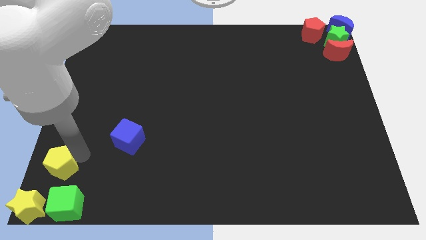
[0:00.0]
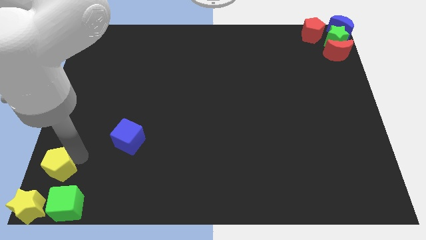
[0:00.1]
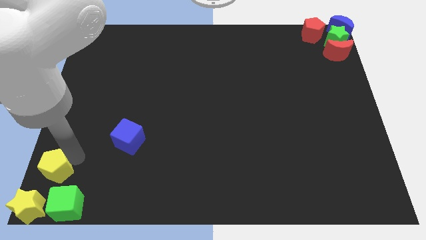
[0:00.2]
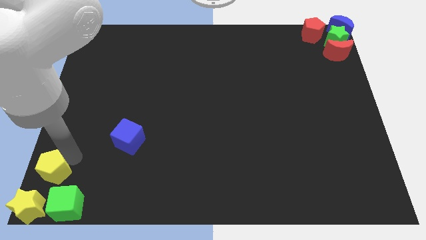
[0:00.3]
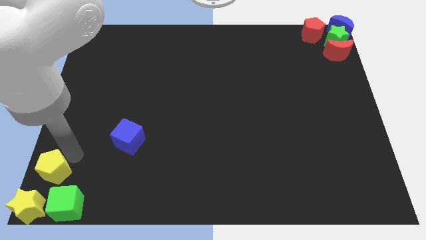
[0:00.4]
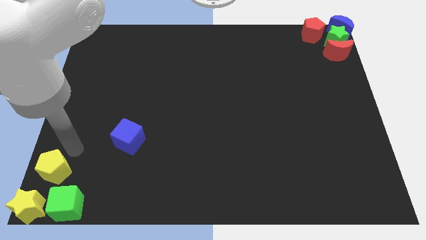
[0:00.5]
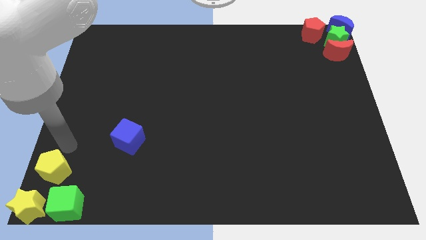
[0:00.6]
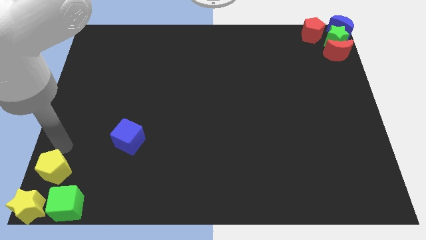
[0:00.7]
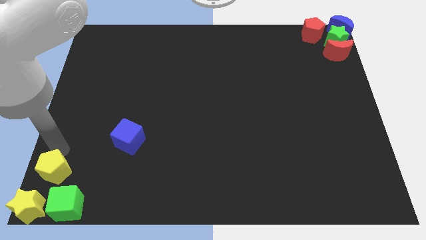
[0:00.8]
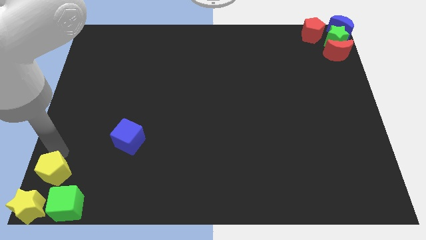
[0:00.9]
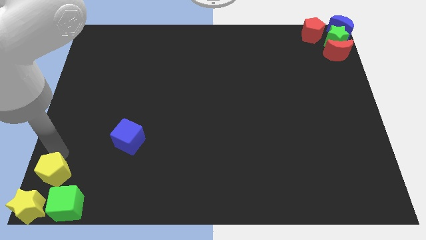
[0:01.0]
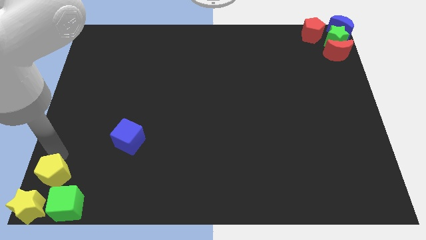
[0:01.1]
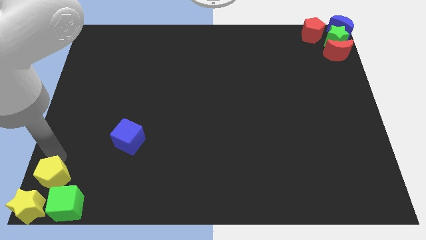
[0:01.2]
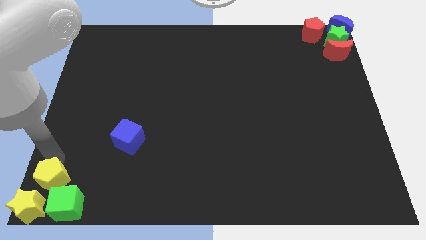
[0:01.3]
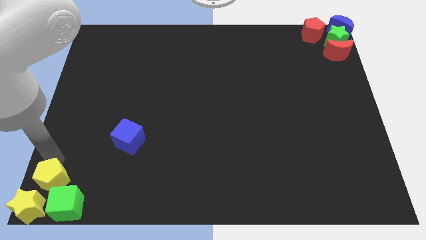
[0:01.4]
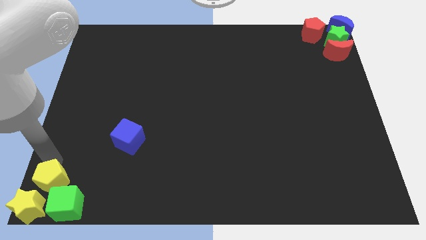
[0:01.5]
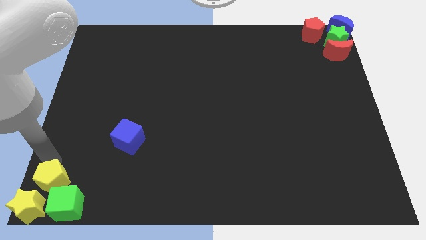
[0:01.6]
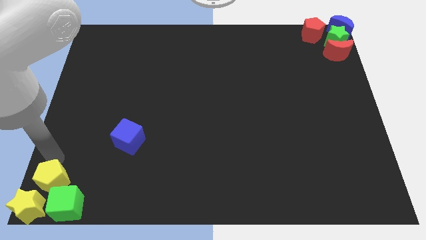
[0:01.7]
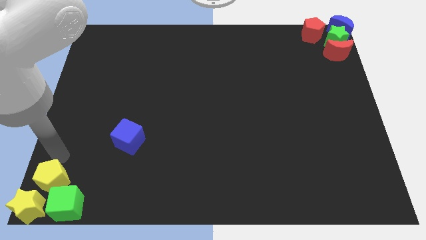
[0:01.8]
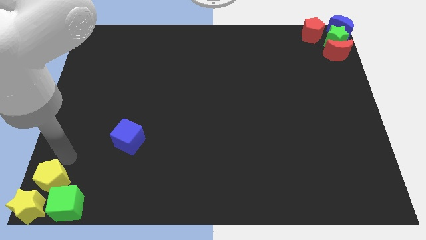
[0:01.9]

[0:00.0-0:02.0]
push yellow pentagon into the group of blocks

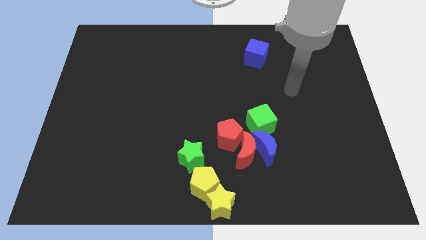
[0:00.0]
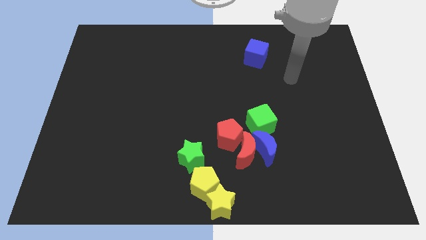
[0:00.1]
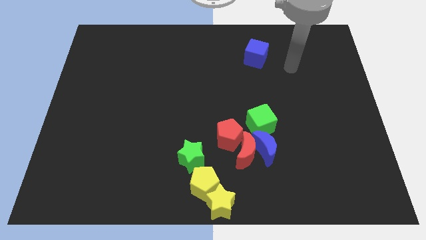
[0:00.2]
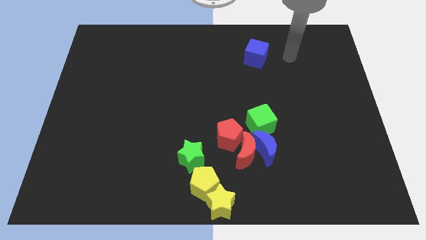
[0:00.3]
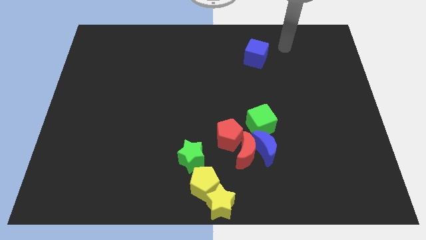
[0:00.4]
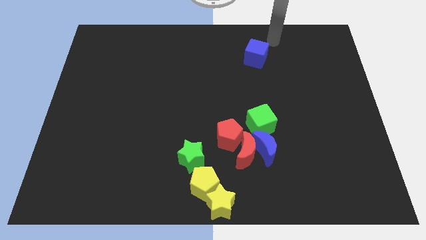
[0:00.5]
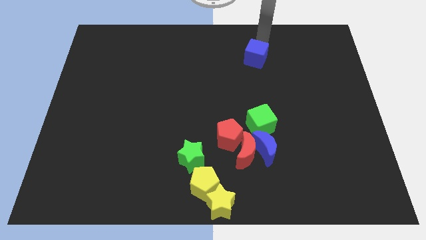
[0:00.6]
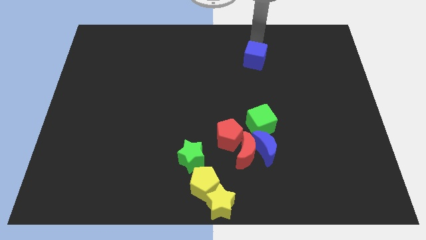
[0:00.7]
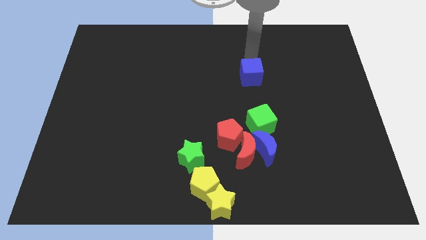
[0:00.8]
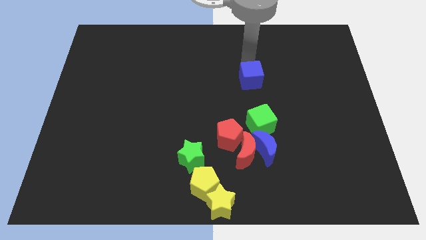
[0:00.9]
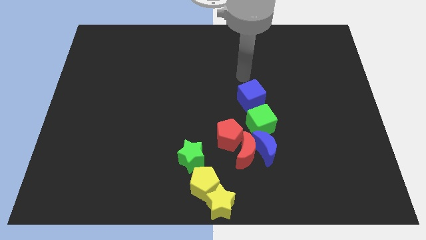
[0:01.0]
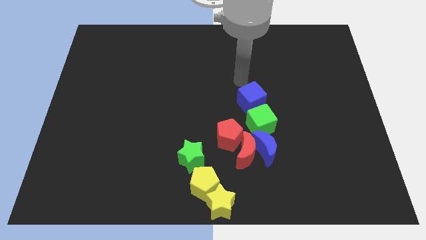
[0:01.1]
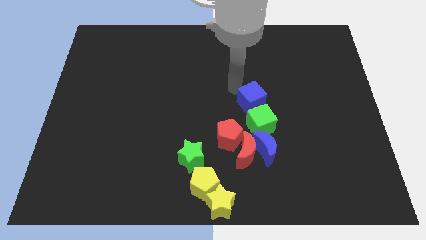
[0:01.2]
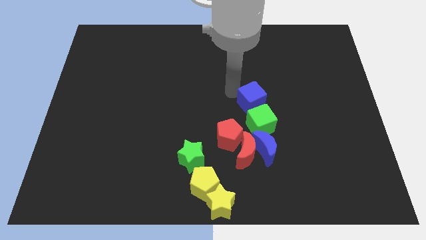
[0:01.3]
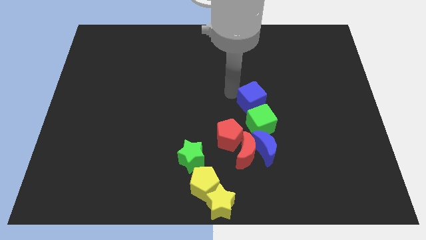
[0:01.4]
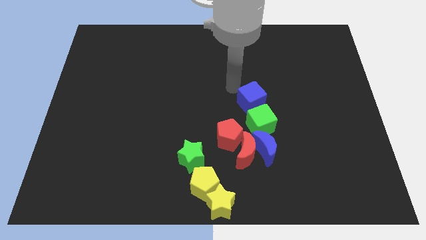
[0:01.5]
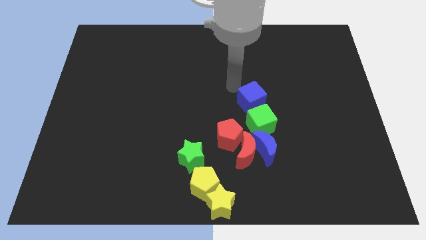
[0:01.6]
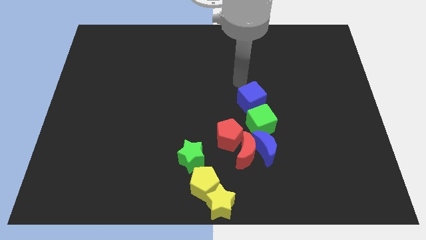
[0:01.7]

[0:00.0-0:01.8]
push the blue cube close to the green cube

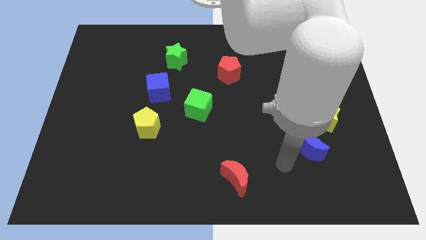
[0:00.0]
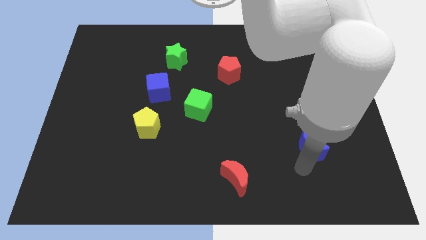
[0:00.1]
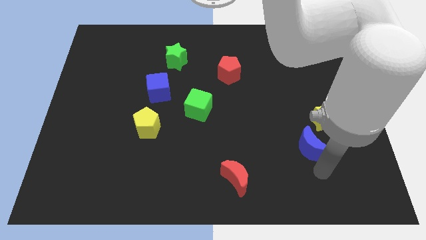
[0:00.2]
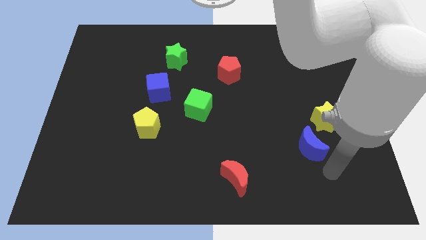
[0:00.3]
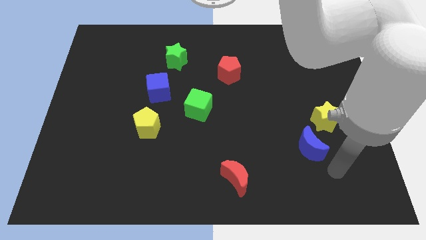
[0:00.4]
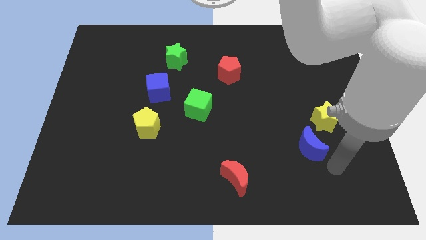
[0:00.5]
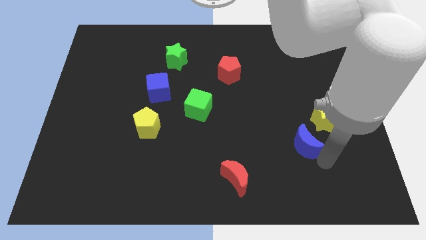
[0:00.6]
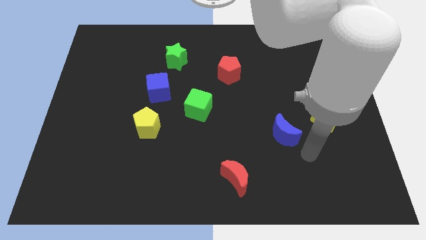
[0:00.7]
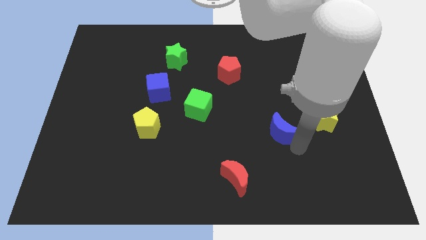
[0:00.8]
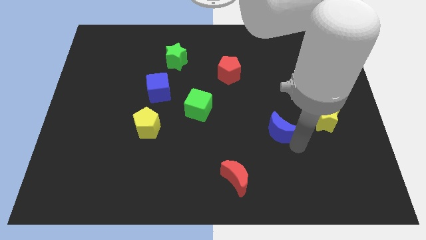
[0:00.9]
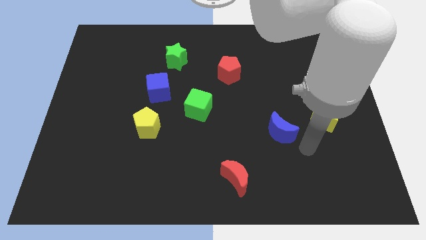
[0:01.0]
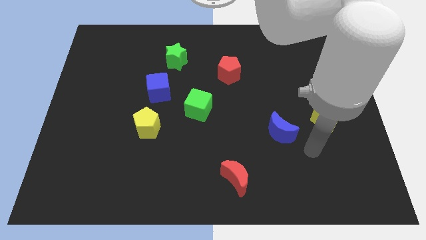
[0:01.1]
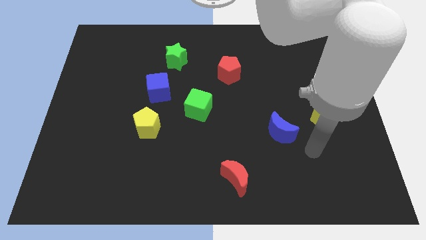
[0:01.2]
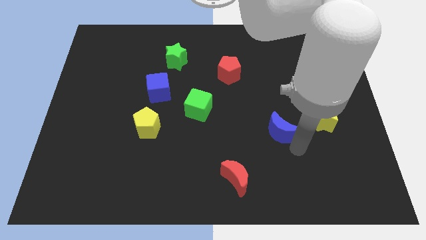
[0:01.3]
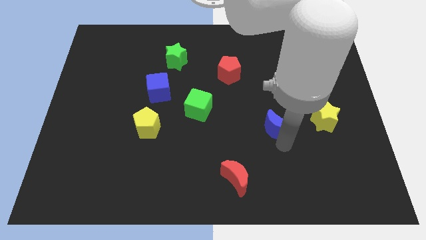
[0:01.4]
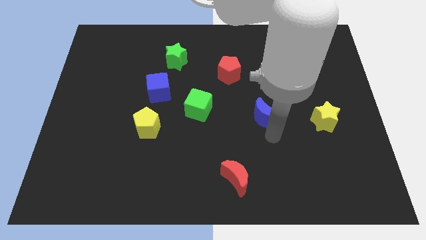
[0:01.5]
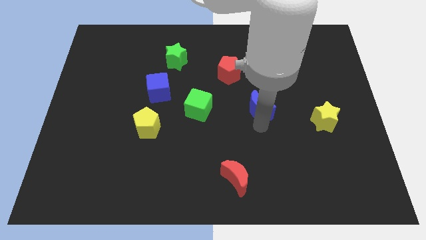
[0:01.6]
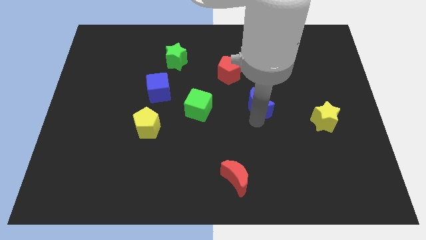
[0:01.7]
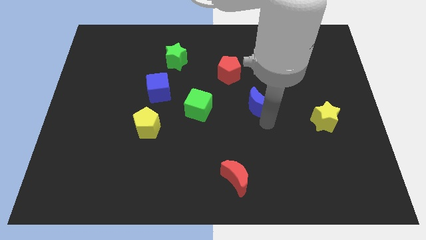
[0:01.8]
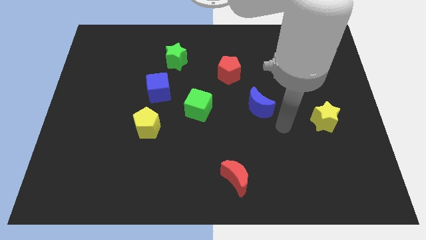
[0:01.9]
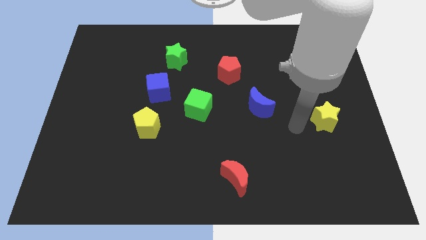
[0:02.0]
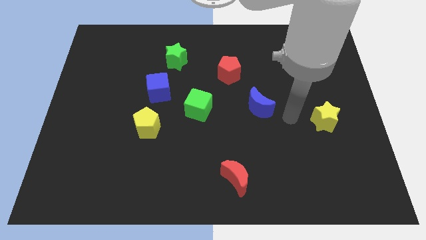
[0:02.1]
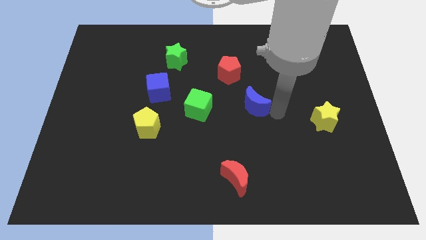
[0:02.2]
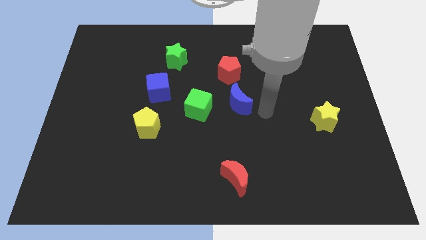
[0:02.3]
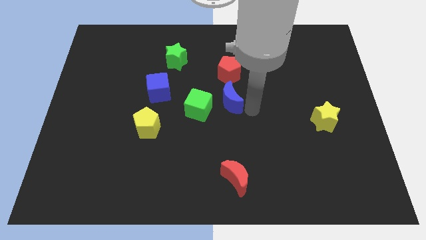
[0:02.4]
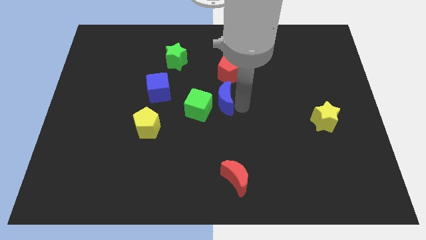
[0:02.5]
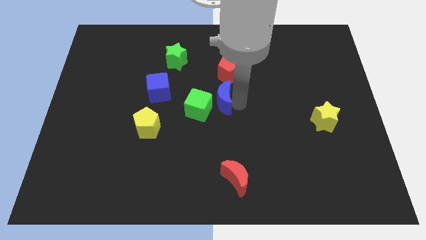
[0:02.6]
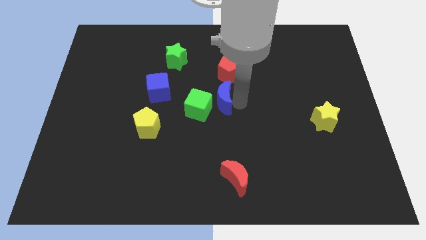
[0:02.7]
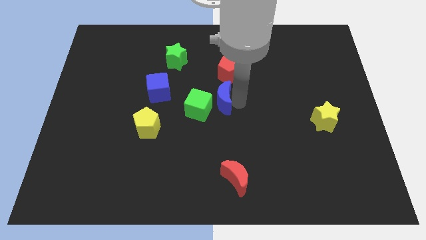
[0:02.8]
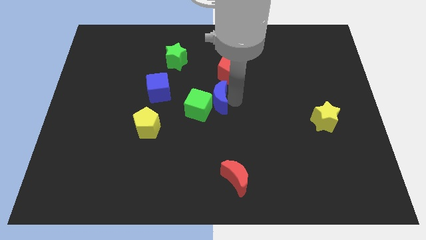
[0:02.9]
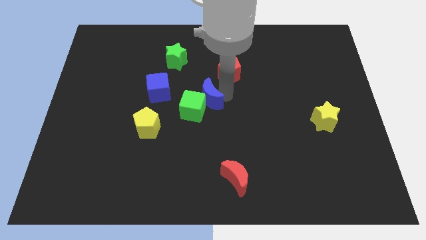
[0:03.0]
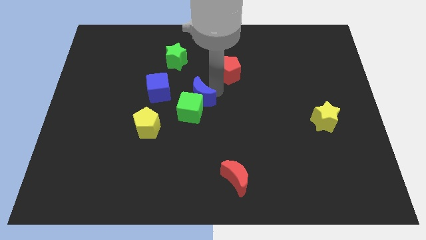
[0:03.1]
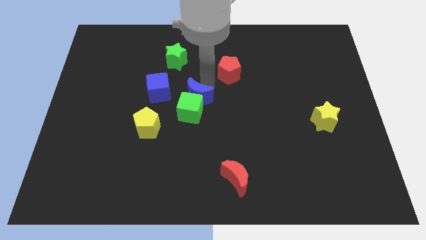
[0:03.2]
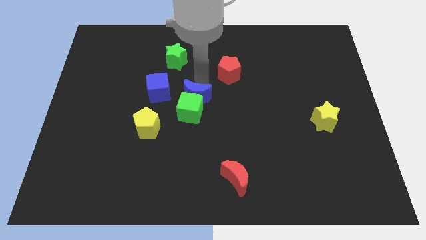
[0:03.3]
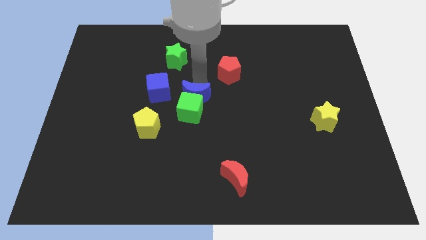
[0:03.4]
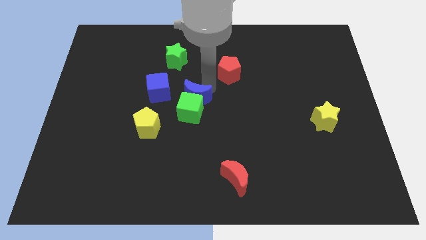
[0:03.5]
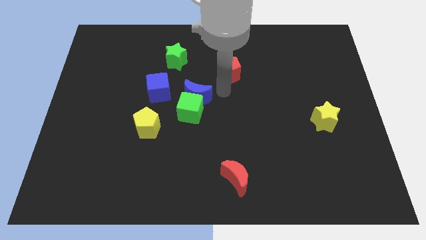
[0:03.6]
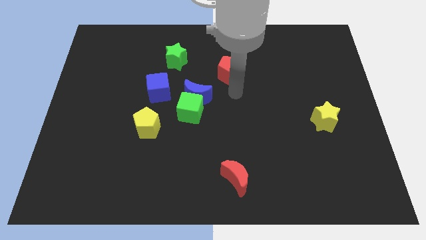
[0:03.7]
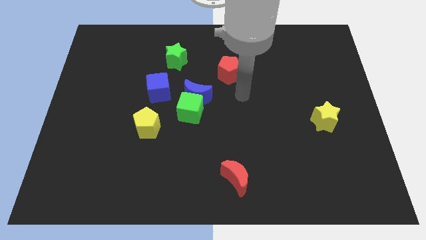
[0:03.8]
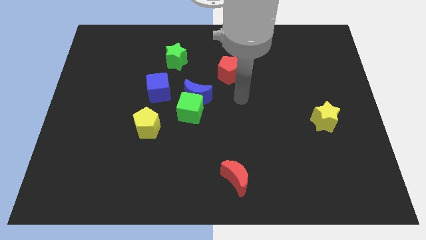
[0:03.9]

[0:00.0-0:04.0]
place a blue moon on the top of green cube

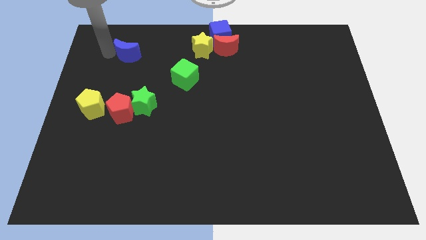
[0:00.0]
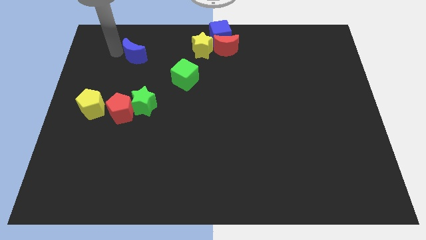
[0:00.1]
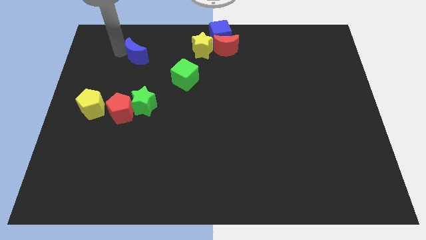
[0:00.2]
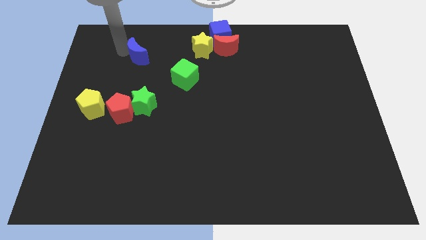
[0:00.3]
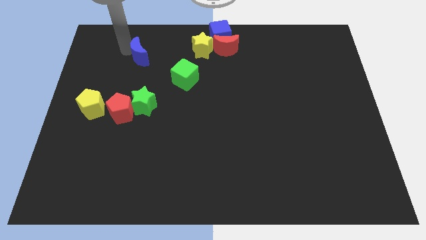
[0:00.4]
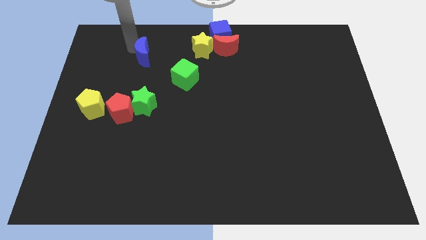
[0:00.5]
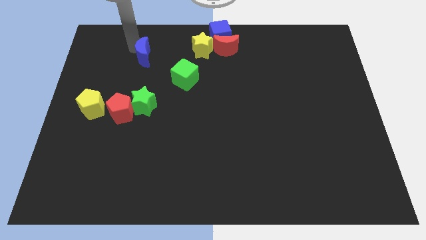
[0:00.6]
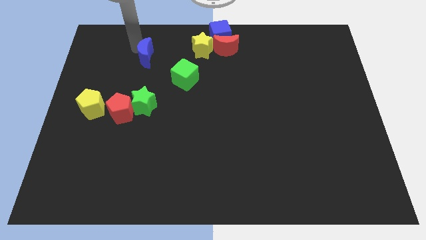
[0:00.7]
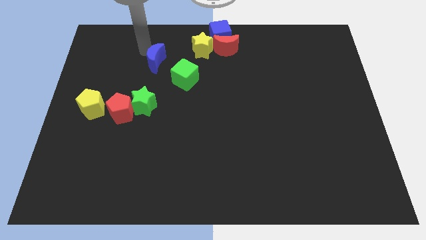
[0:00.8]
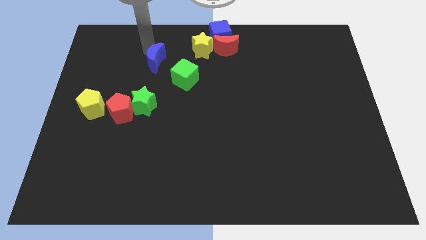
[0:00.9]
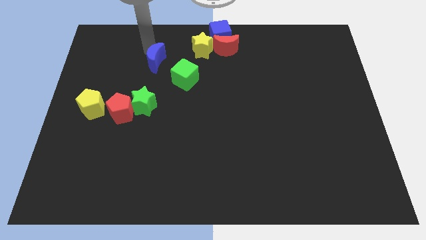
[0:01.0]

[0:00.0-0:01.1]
move blue cube towards green cube
